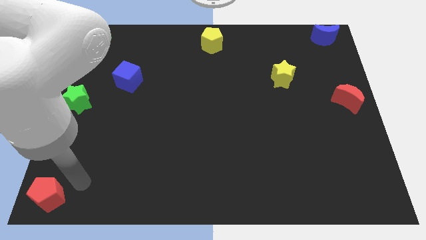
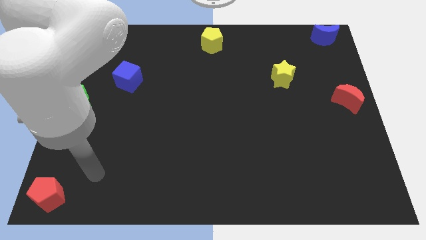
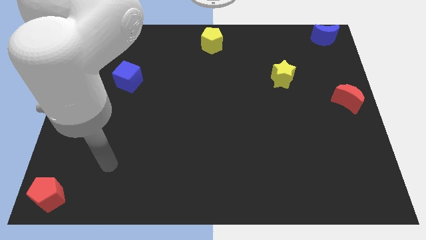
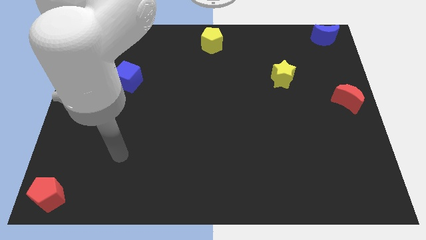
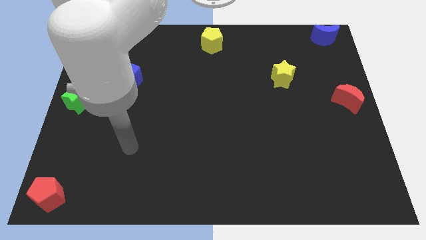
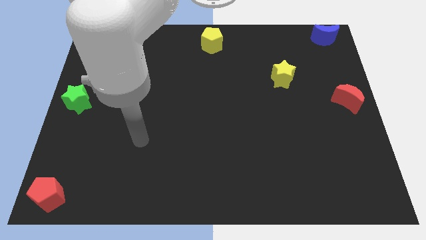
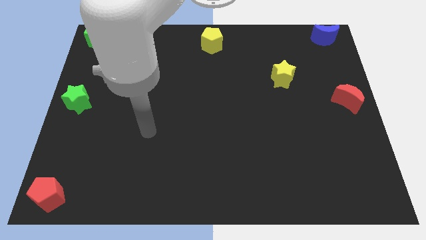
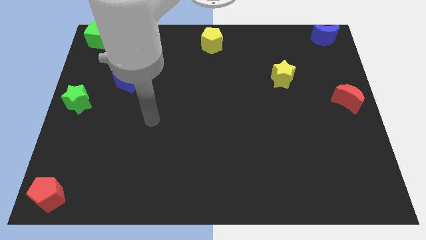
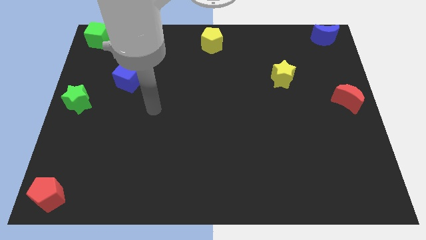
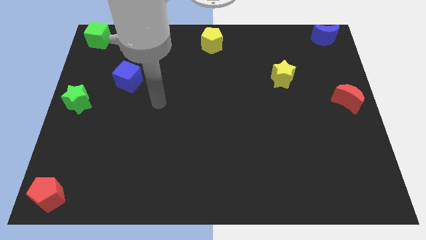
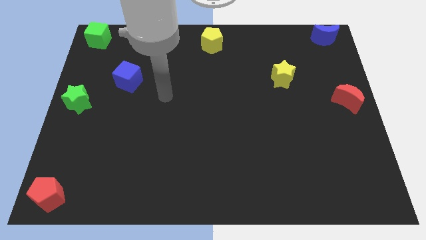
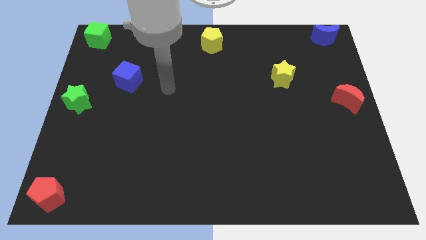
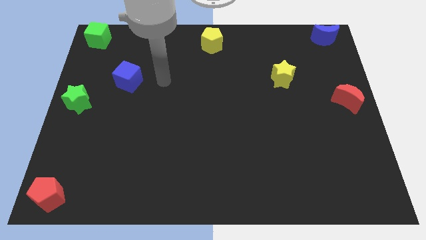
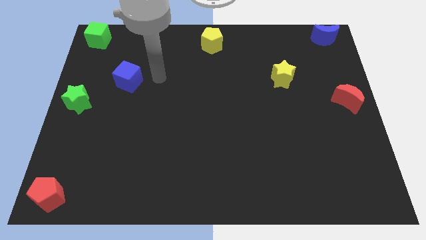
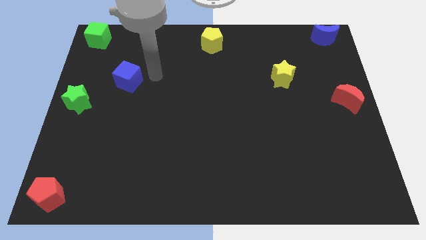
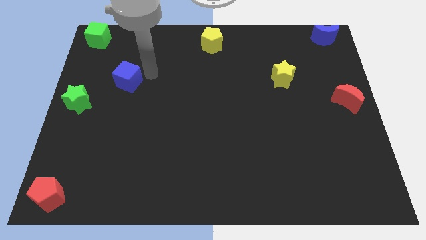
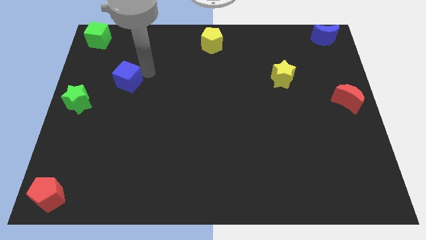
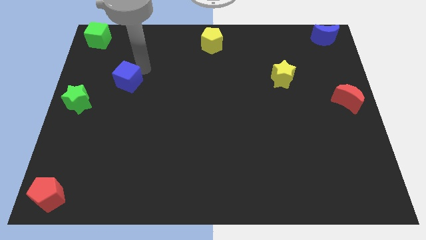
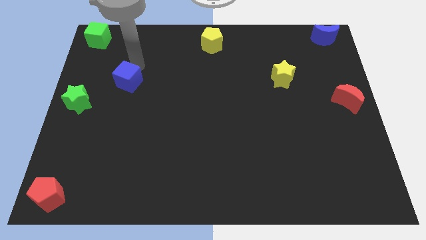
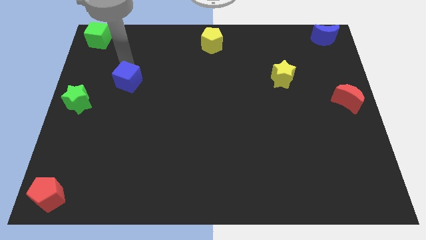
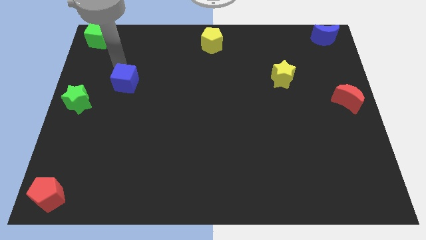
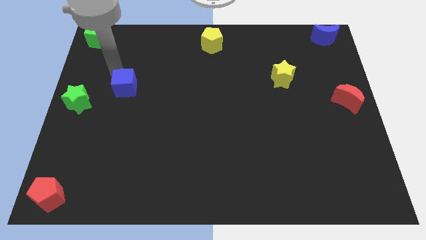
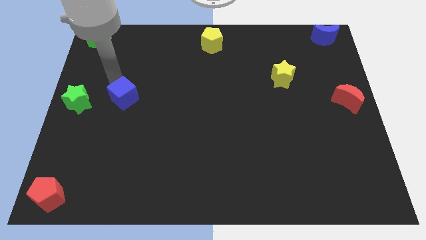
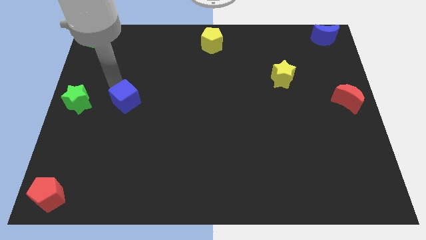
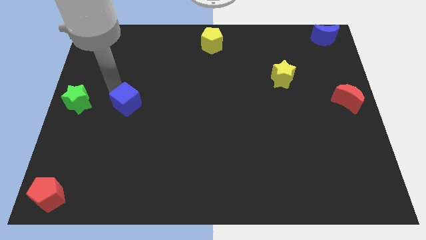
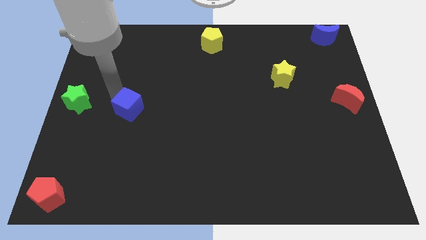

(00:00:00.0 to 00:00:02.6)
move your arm into the blue cube

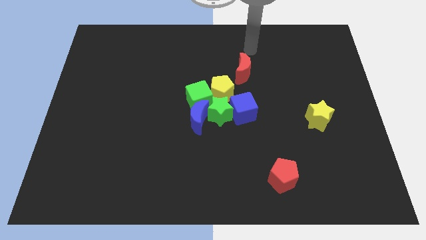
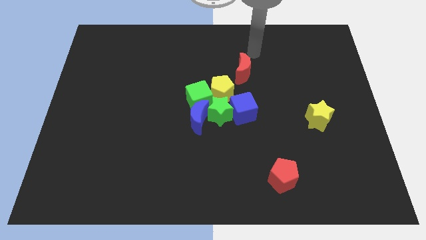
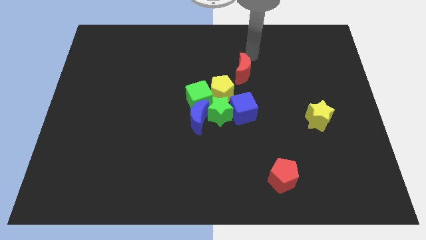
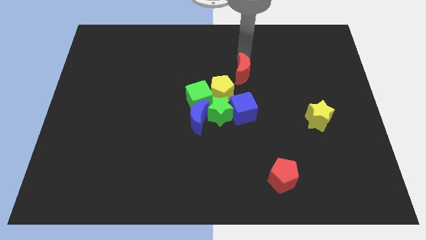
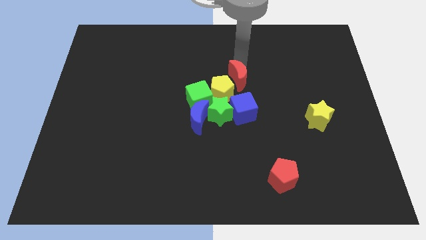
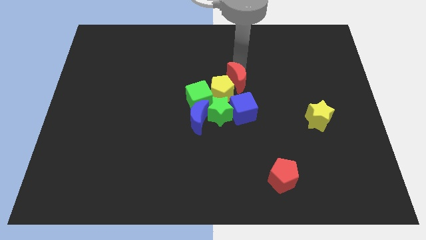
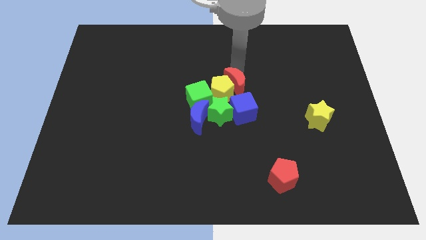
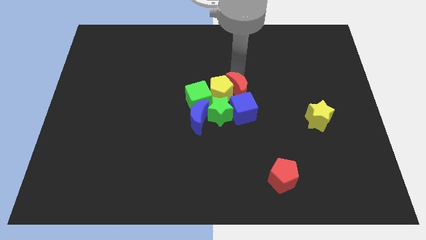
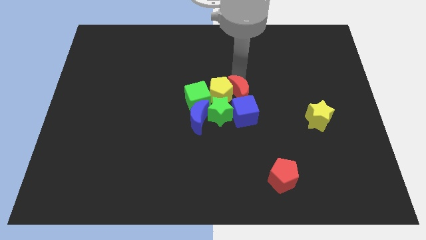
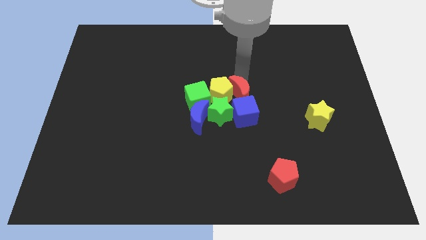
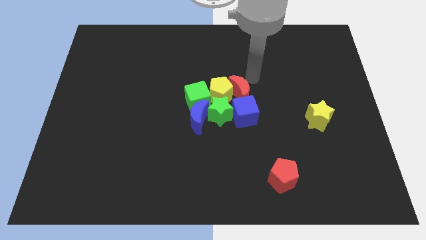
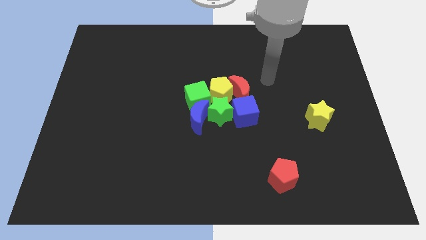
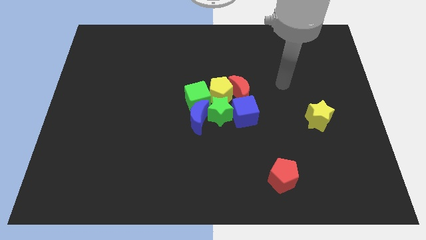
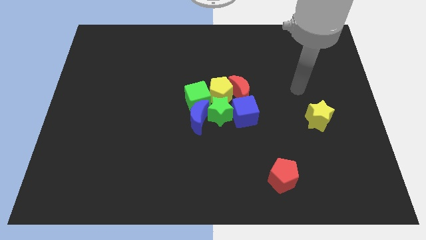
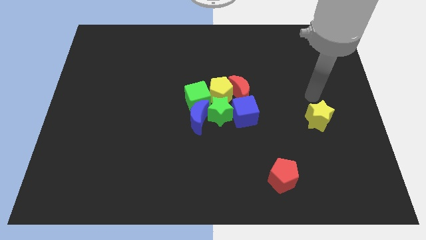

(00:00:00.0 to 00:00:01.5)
slide the red crescent to the right side of the yellow pentagon

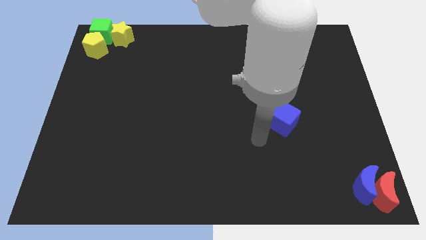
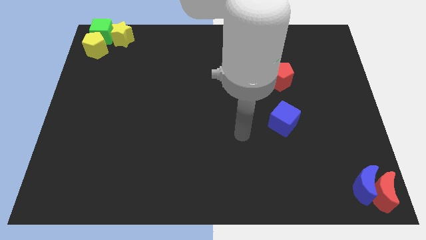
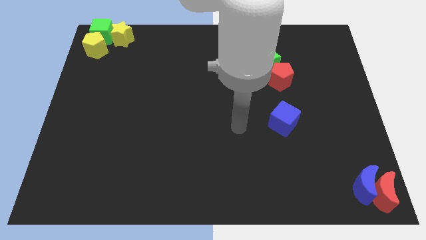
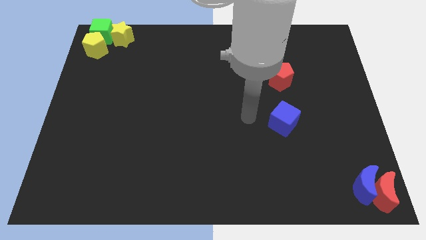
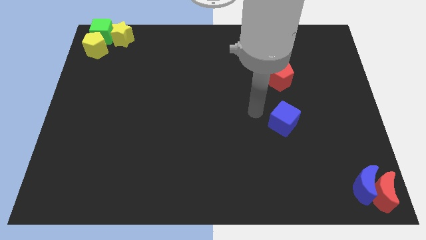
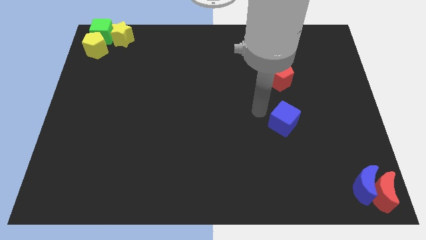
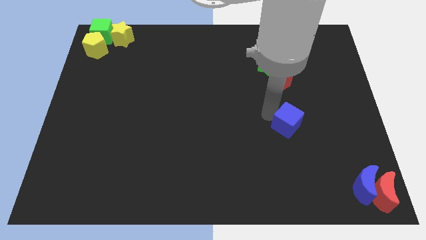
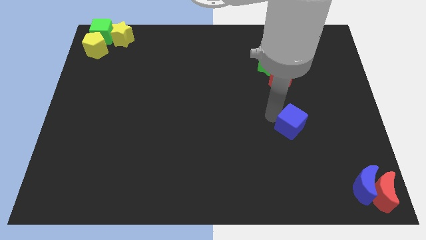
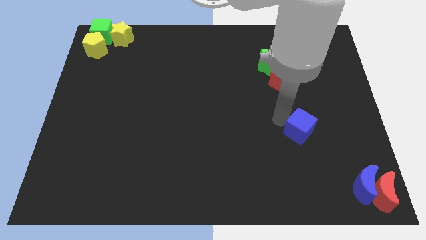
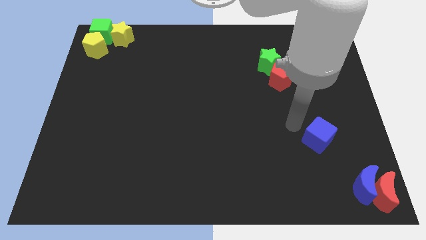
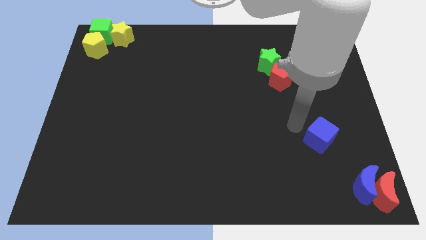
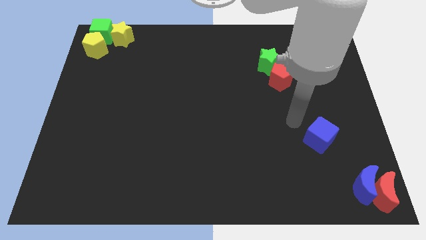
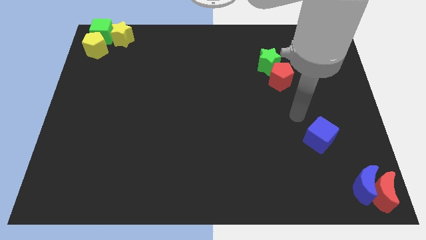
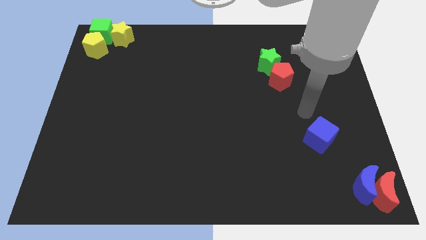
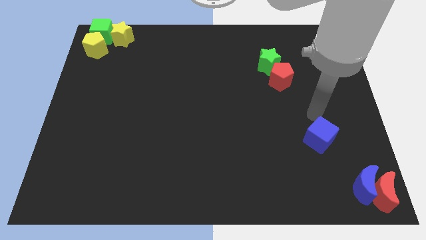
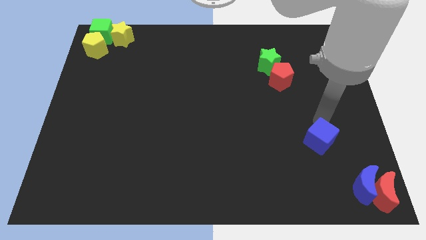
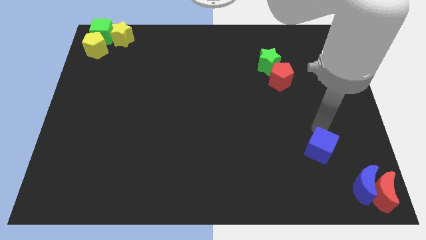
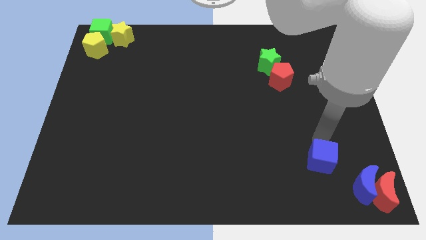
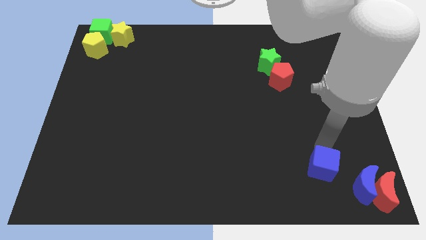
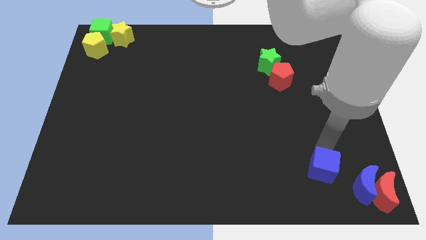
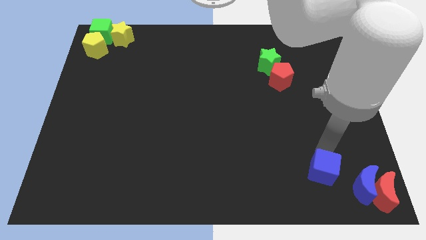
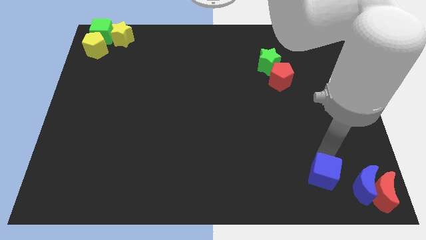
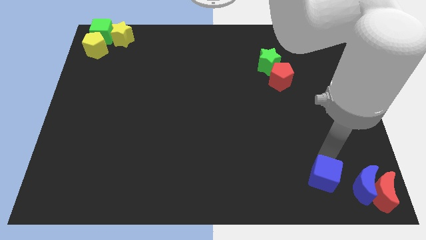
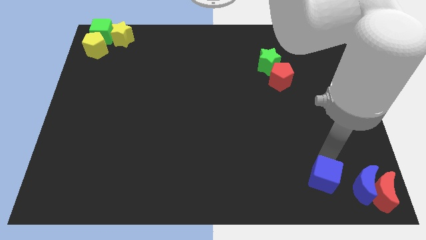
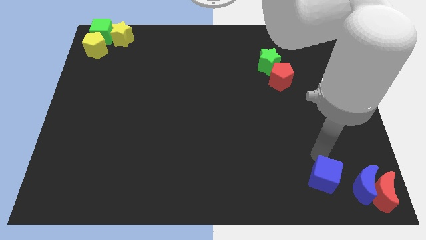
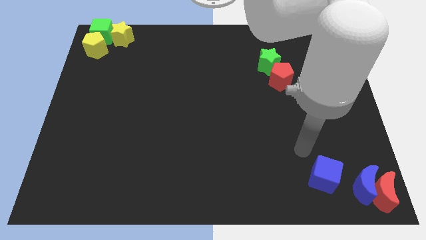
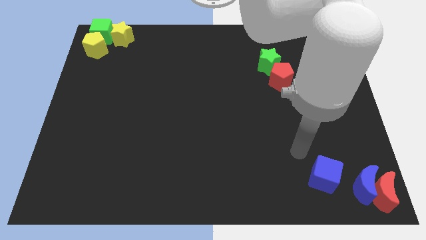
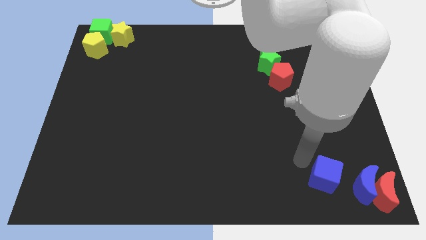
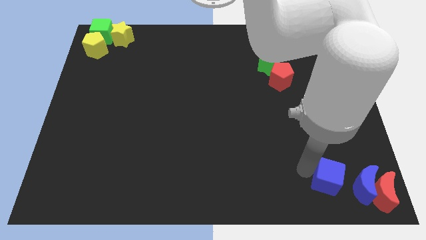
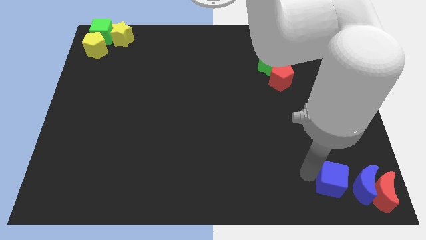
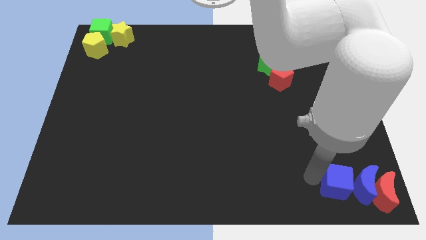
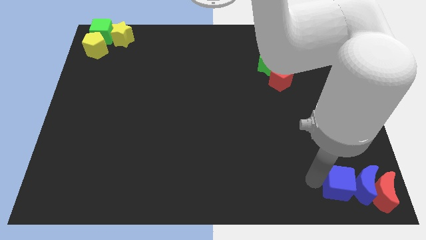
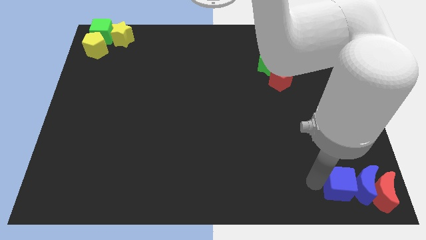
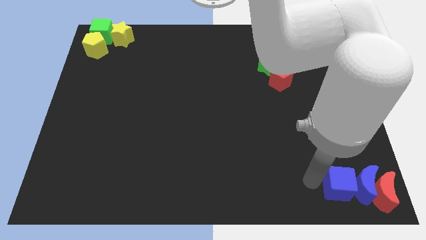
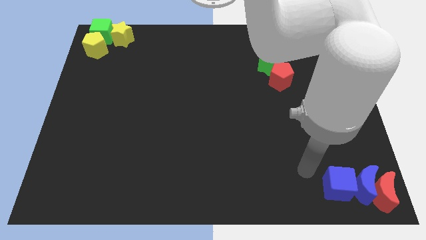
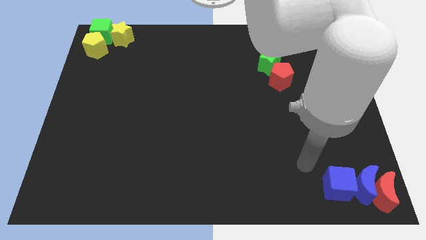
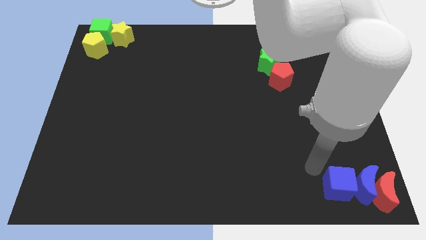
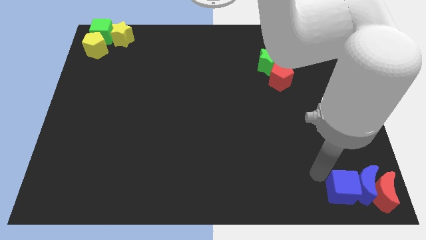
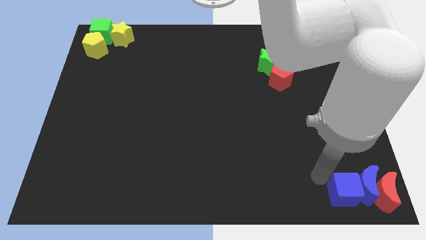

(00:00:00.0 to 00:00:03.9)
place blue cube beside blue crescent

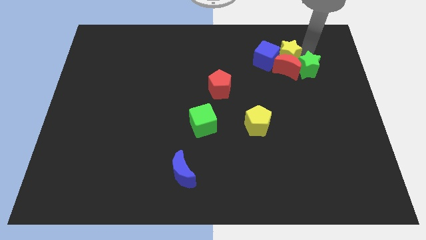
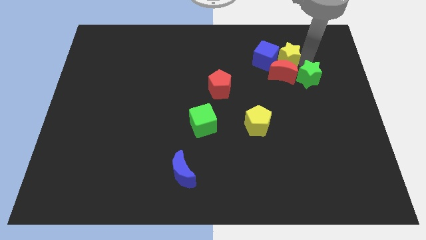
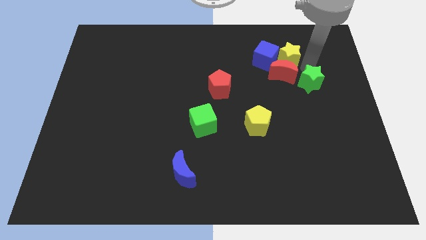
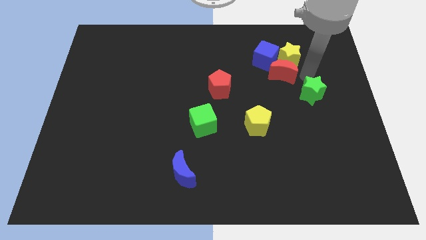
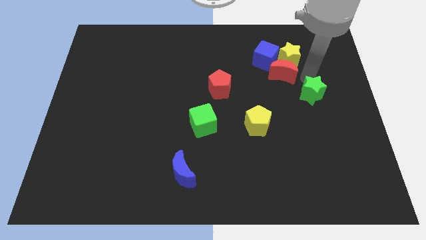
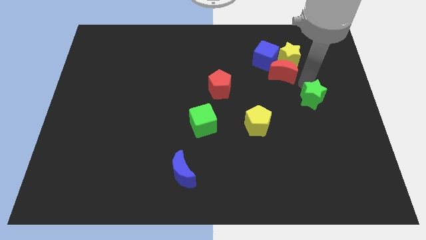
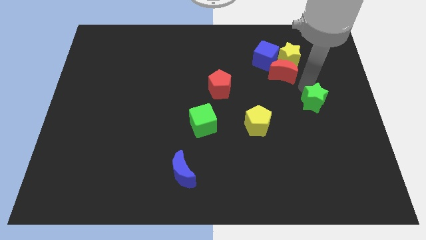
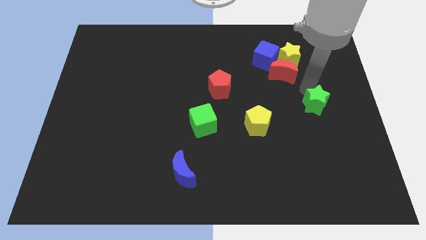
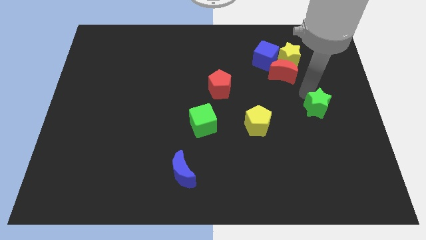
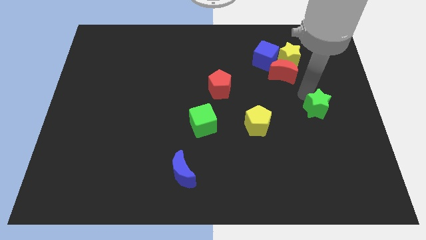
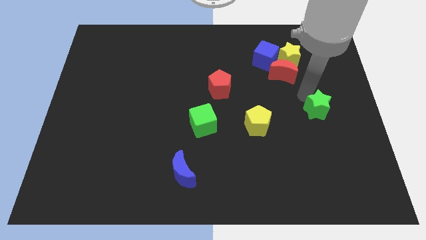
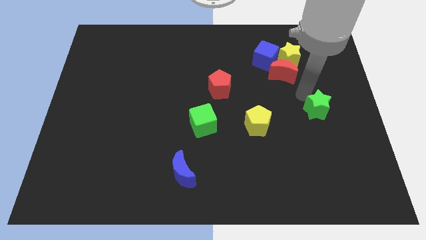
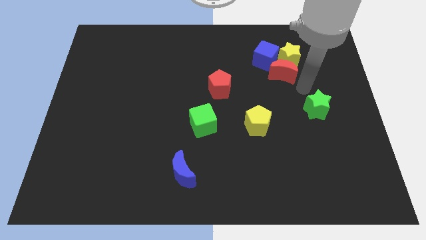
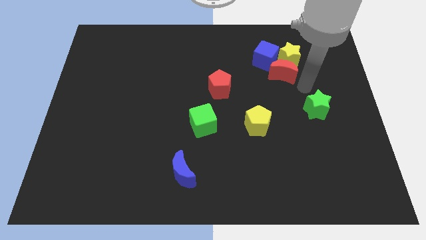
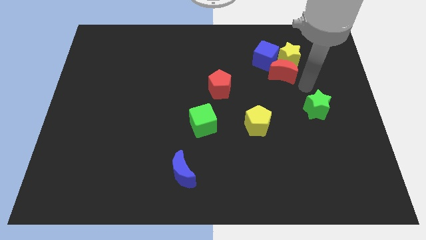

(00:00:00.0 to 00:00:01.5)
push the green star downwards
